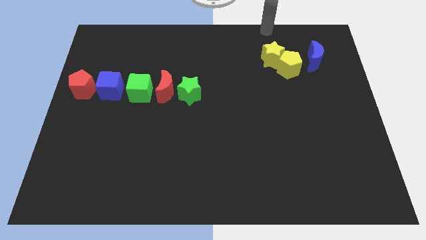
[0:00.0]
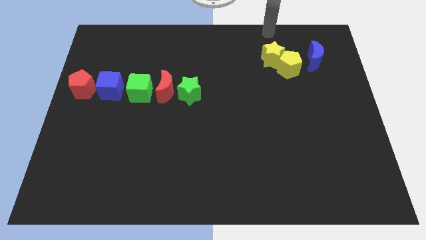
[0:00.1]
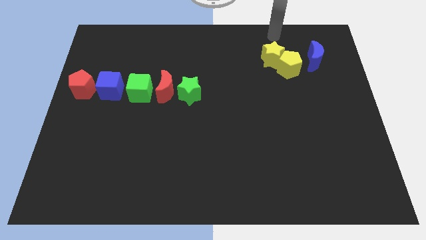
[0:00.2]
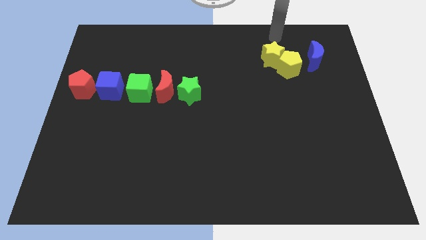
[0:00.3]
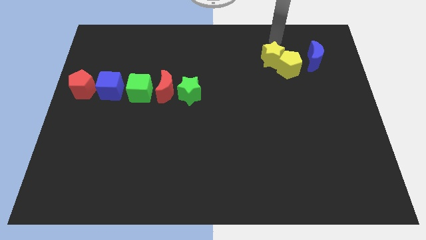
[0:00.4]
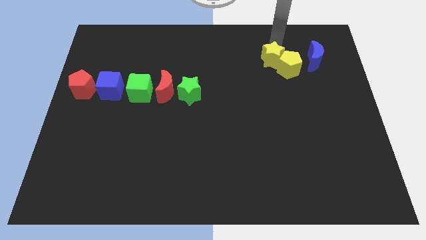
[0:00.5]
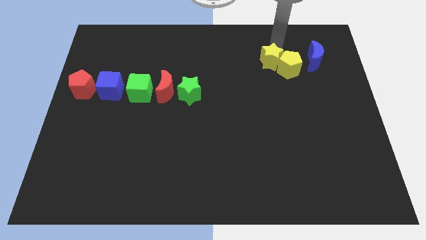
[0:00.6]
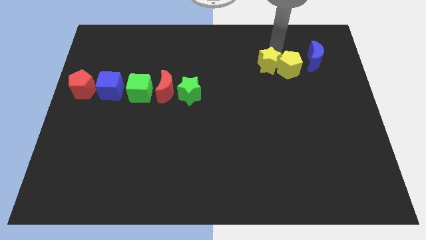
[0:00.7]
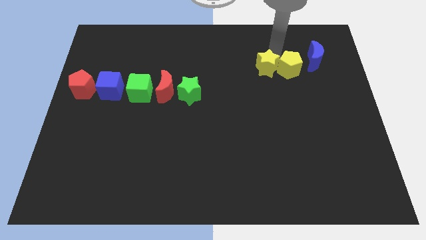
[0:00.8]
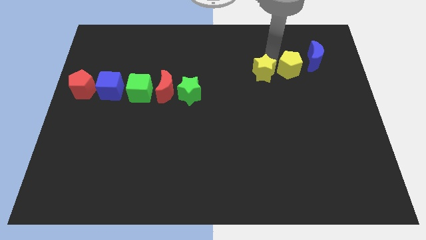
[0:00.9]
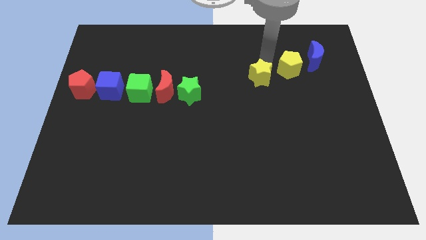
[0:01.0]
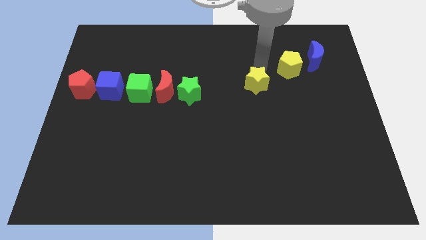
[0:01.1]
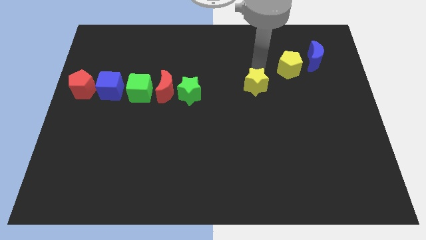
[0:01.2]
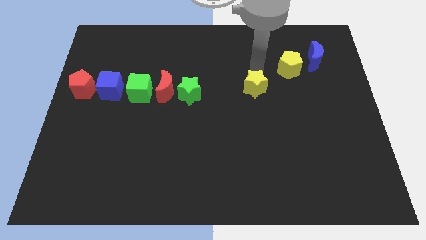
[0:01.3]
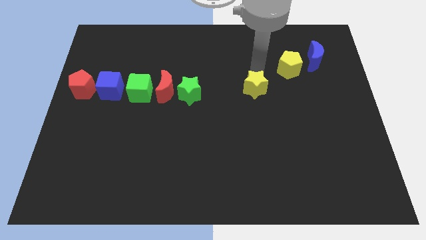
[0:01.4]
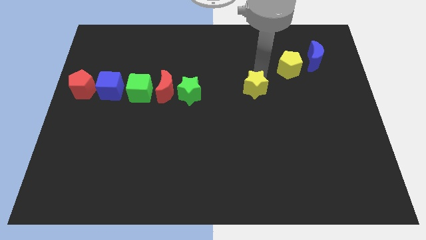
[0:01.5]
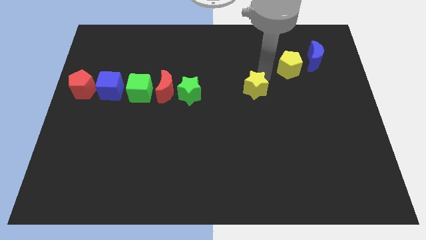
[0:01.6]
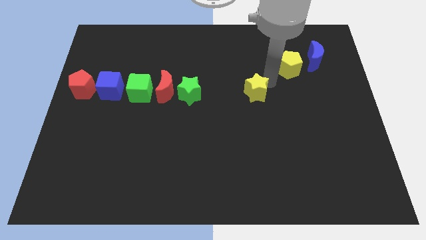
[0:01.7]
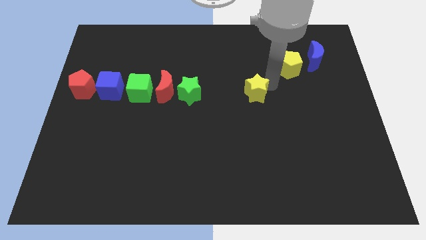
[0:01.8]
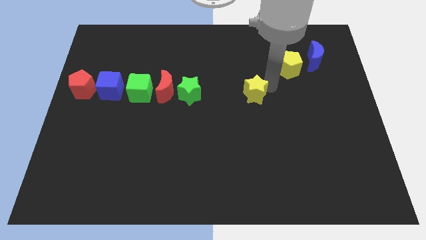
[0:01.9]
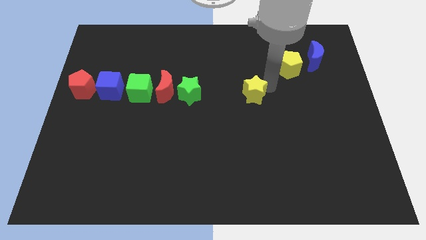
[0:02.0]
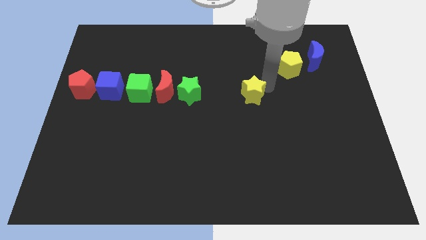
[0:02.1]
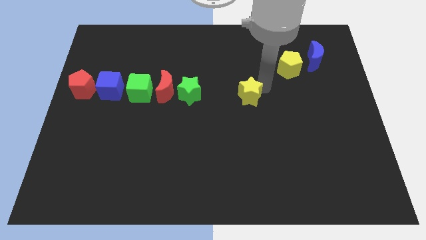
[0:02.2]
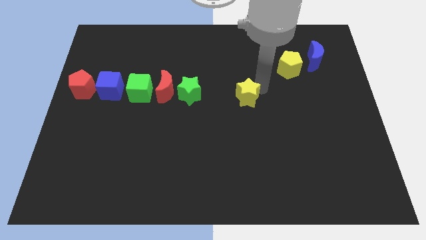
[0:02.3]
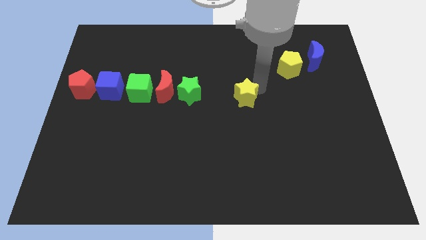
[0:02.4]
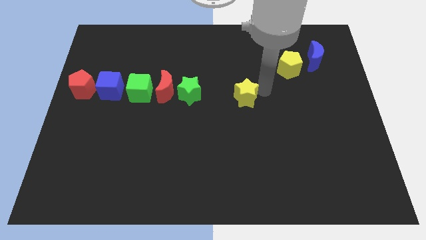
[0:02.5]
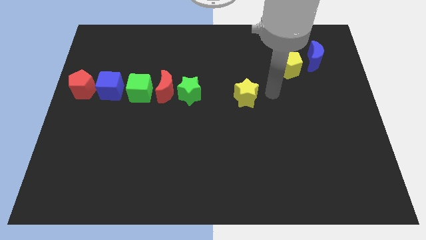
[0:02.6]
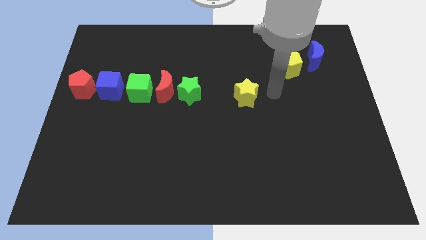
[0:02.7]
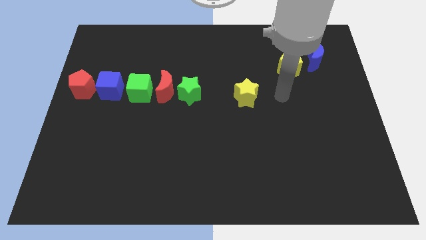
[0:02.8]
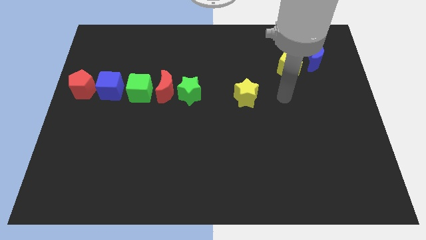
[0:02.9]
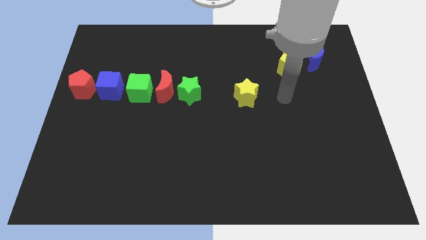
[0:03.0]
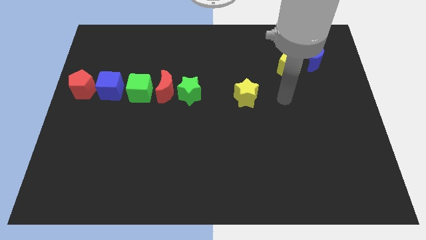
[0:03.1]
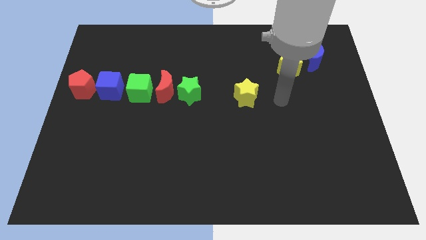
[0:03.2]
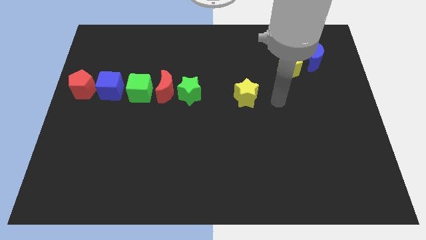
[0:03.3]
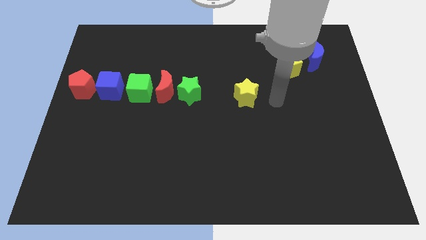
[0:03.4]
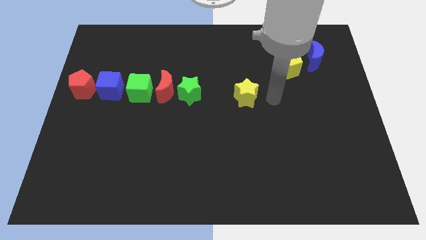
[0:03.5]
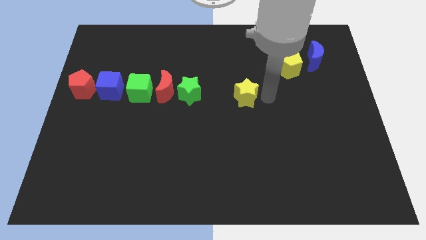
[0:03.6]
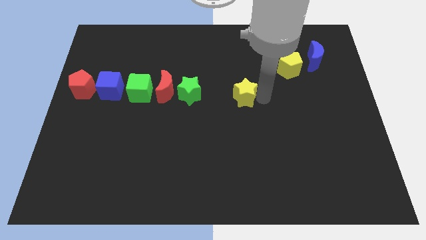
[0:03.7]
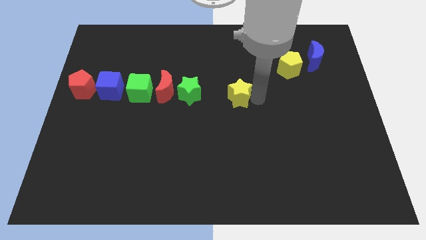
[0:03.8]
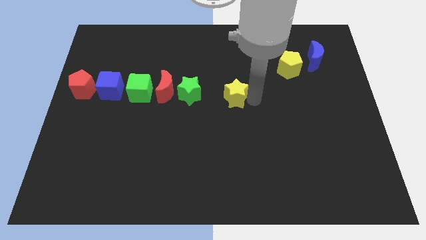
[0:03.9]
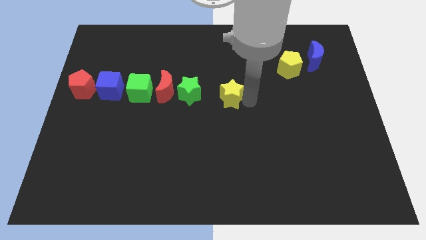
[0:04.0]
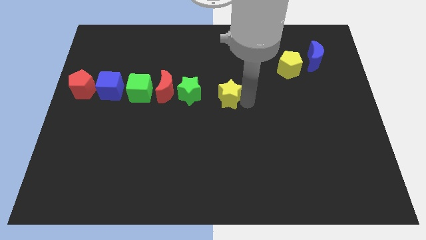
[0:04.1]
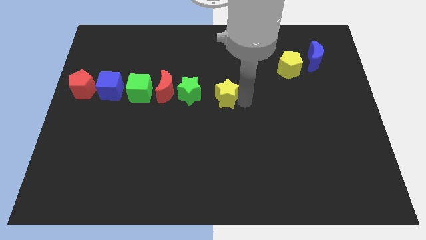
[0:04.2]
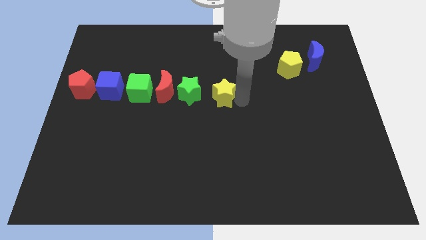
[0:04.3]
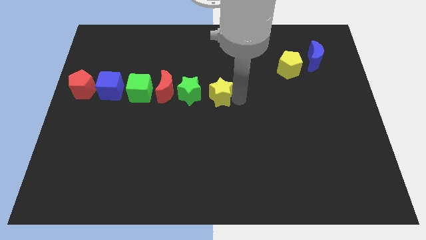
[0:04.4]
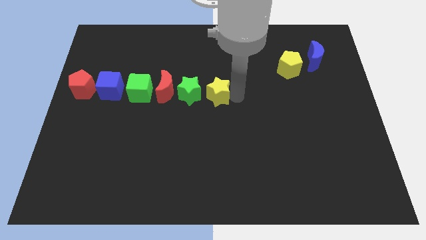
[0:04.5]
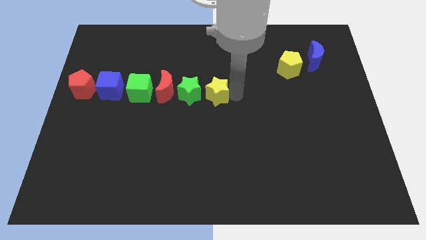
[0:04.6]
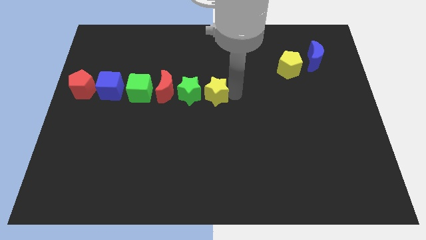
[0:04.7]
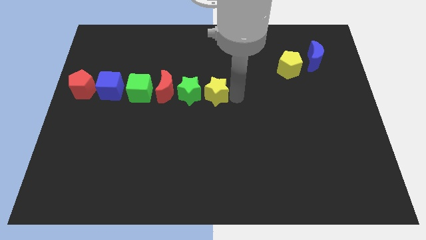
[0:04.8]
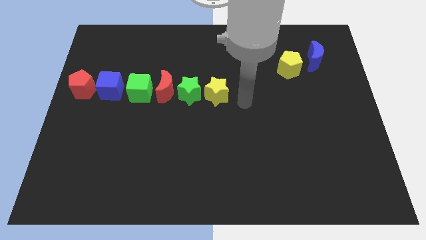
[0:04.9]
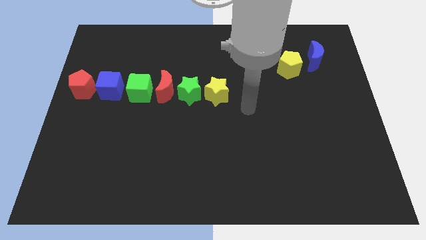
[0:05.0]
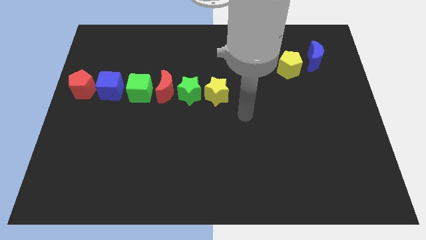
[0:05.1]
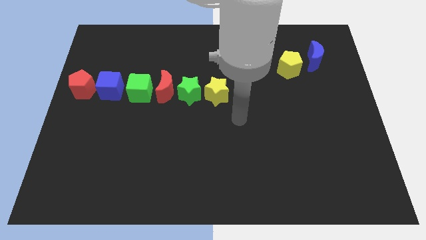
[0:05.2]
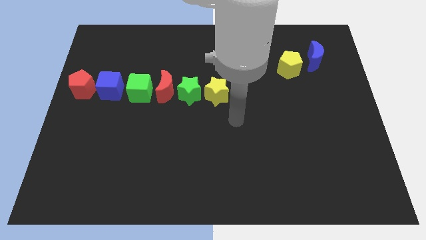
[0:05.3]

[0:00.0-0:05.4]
push the yellow star to the right of green star

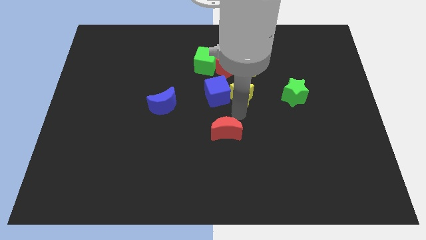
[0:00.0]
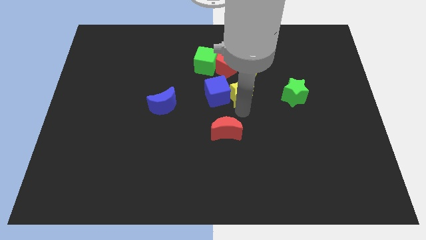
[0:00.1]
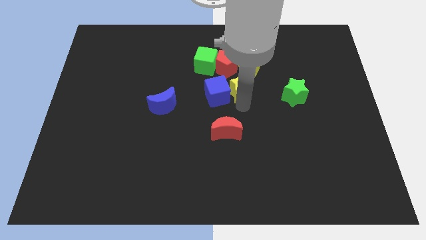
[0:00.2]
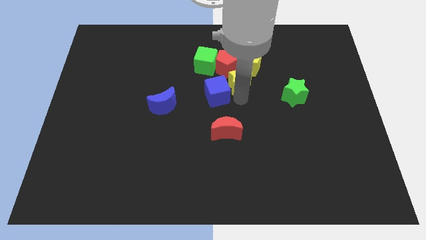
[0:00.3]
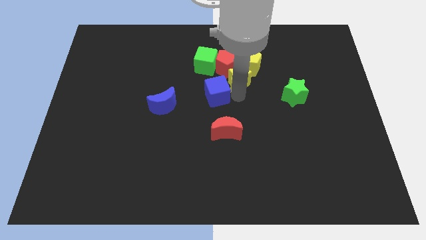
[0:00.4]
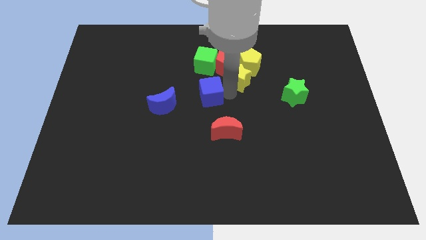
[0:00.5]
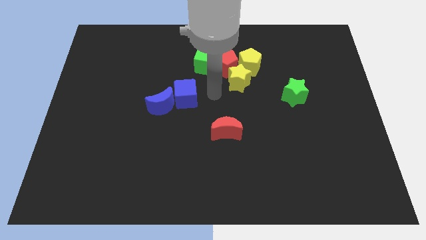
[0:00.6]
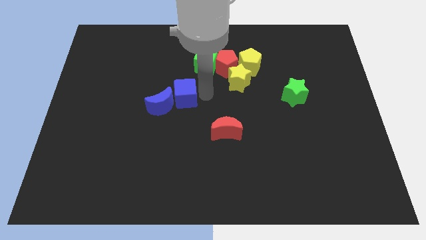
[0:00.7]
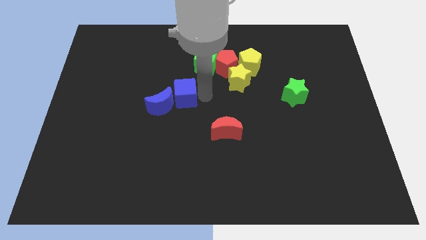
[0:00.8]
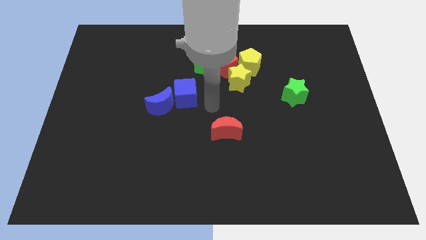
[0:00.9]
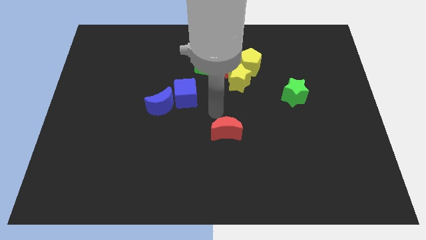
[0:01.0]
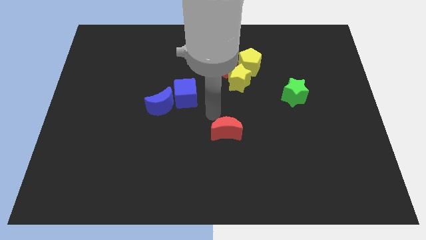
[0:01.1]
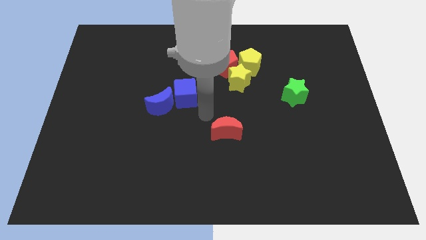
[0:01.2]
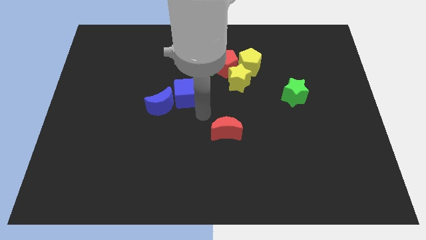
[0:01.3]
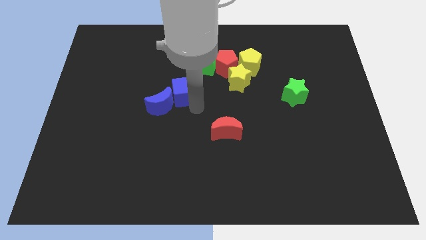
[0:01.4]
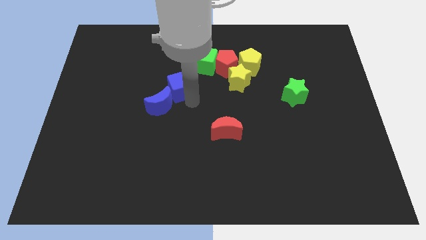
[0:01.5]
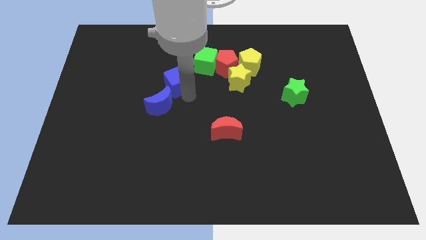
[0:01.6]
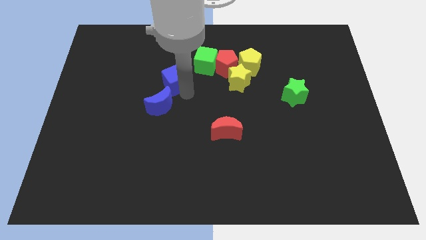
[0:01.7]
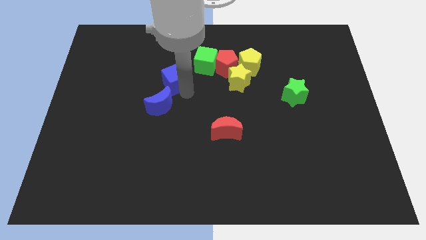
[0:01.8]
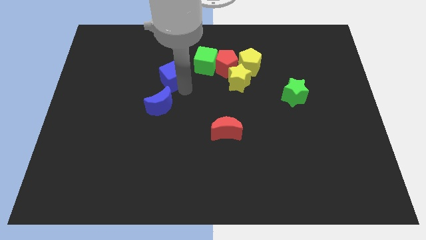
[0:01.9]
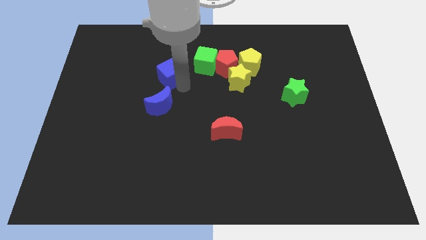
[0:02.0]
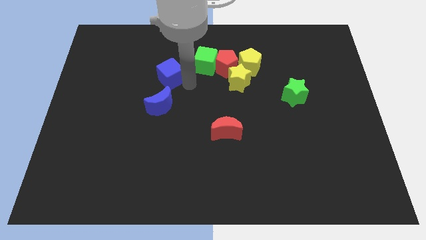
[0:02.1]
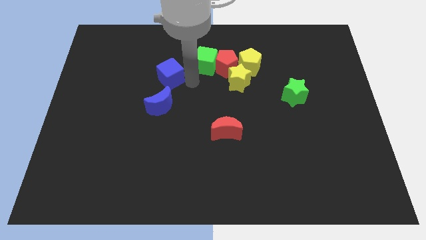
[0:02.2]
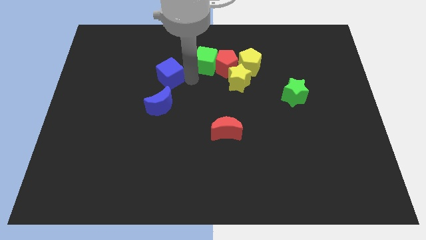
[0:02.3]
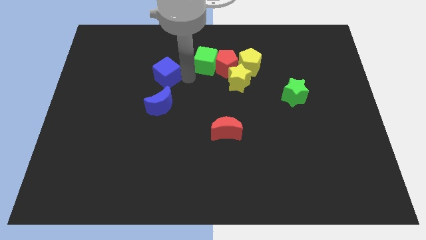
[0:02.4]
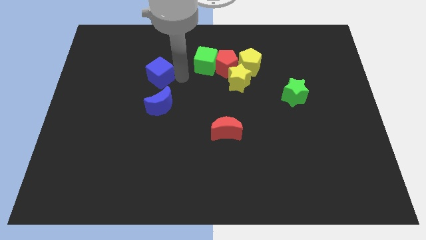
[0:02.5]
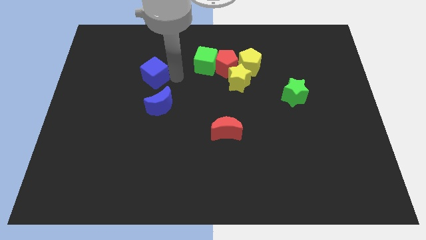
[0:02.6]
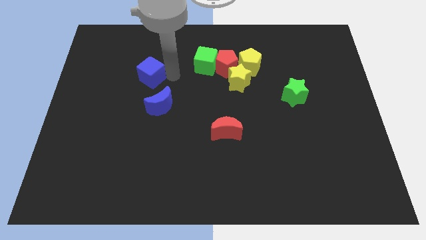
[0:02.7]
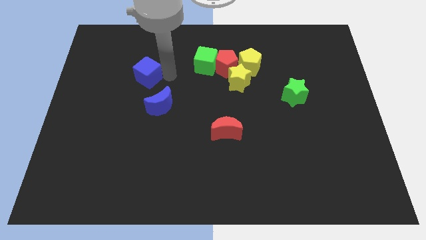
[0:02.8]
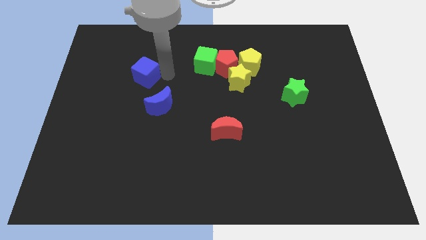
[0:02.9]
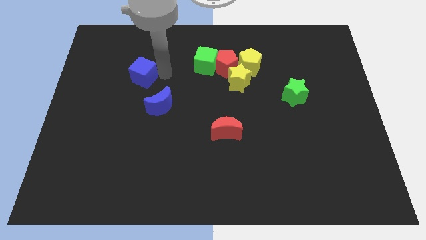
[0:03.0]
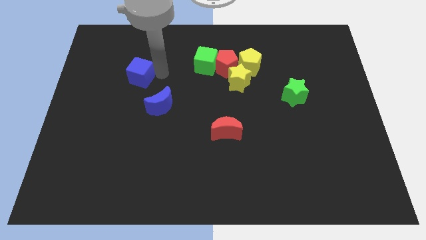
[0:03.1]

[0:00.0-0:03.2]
separate blue cube and yellow star

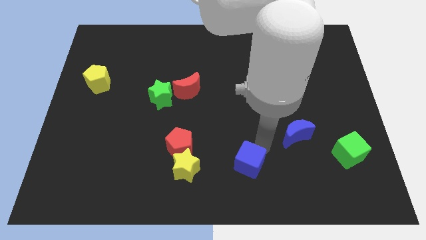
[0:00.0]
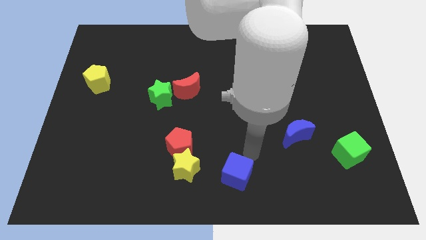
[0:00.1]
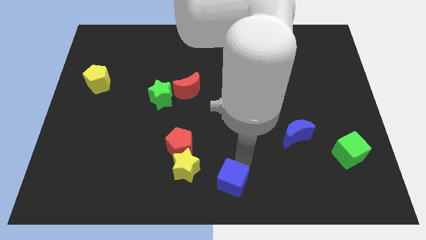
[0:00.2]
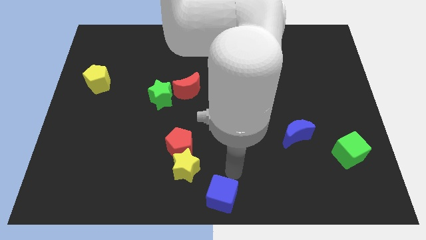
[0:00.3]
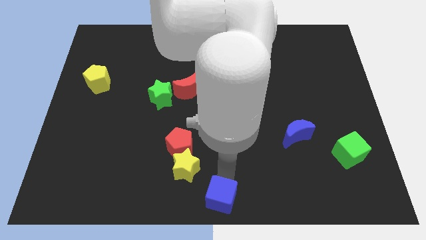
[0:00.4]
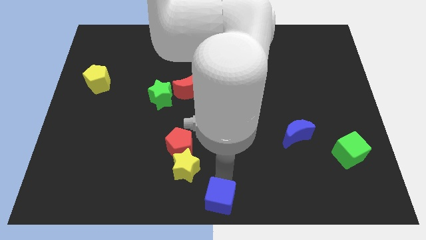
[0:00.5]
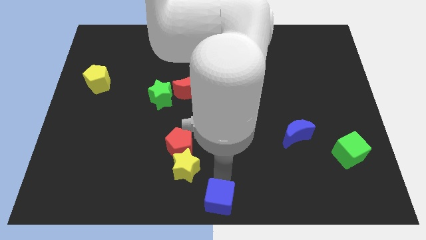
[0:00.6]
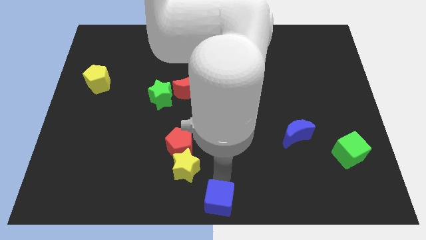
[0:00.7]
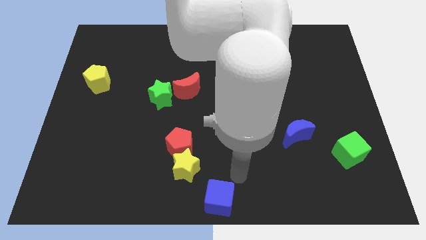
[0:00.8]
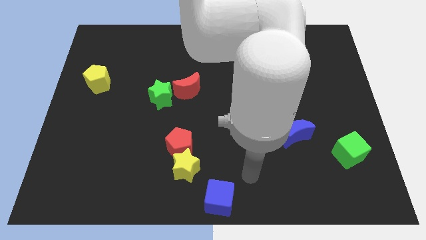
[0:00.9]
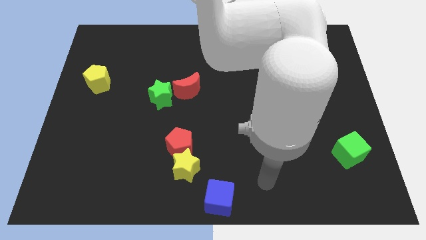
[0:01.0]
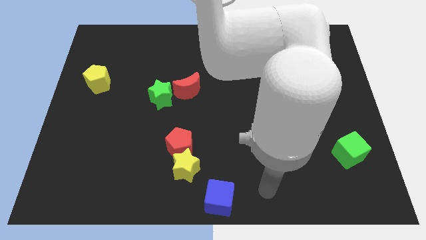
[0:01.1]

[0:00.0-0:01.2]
push the blue cube towards the bottom center of the board
